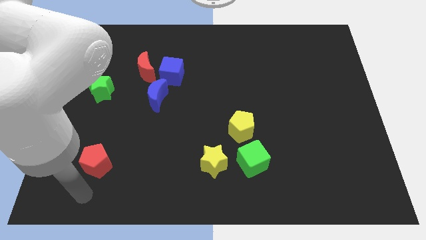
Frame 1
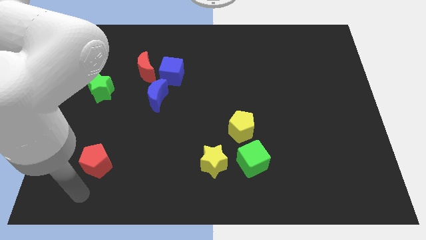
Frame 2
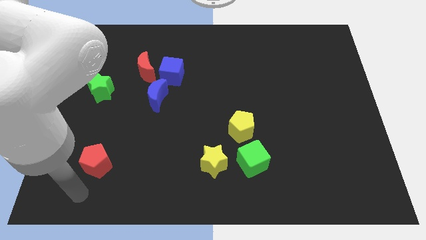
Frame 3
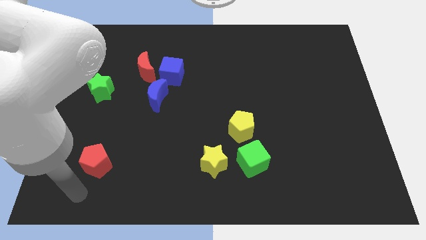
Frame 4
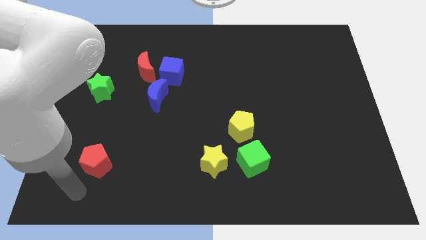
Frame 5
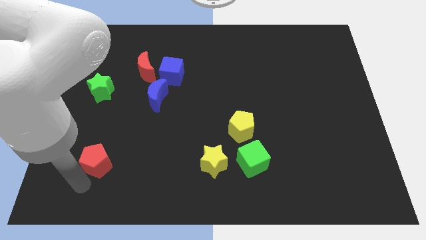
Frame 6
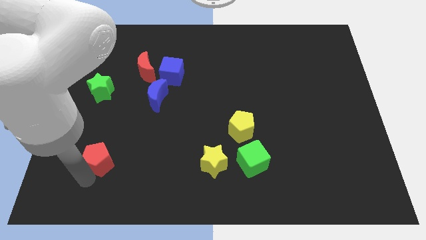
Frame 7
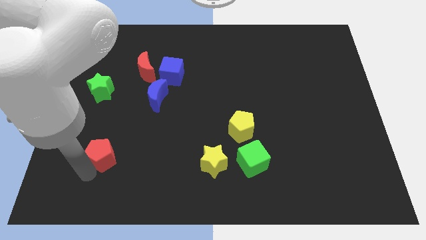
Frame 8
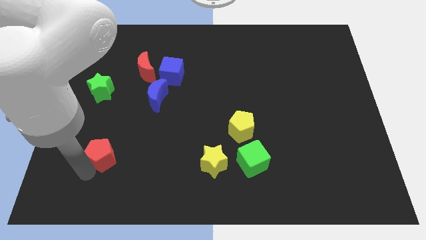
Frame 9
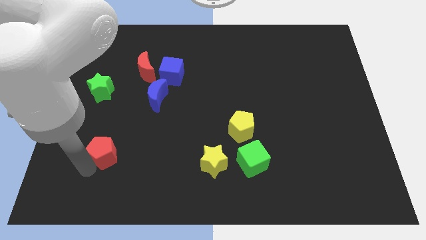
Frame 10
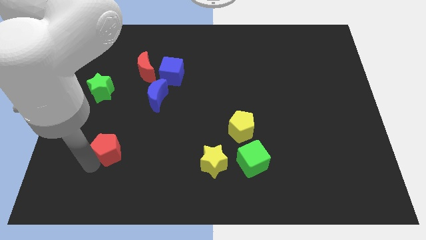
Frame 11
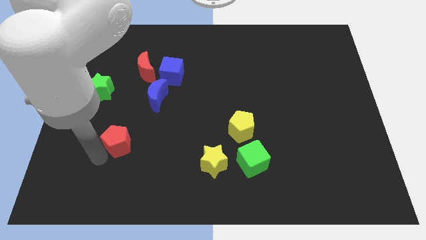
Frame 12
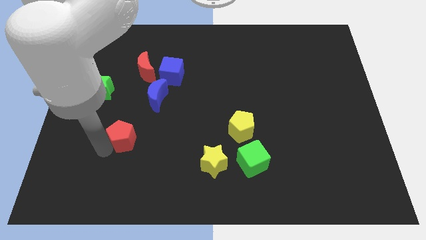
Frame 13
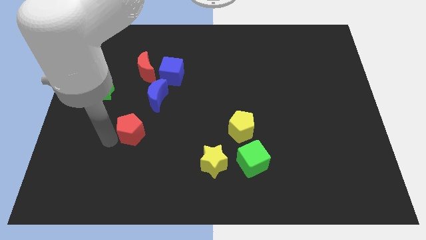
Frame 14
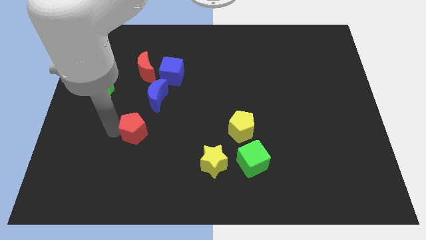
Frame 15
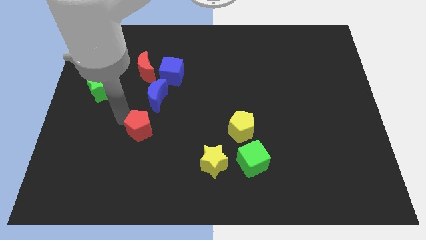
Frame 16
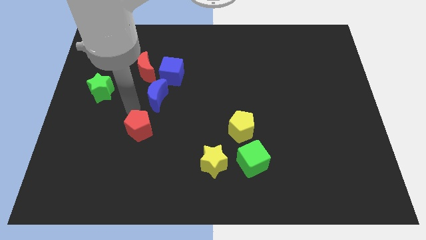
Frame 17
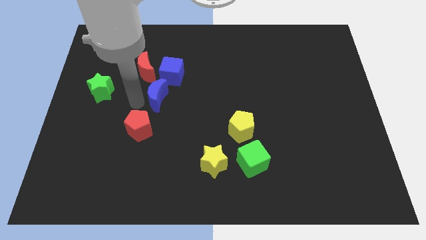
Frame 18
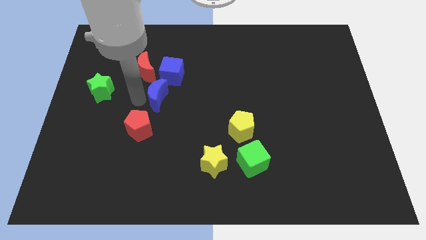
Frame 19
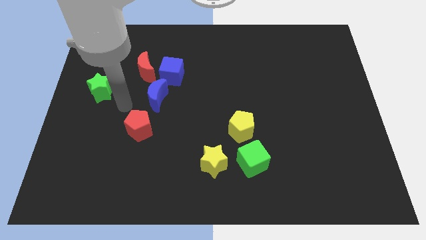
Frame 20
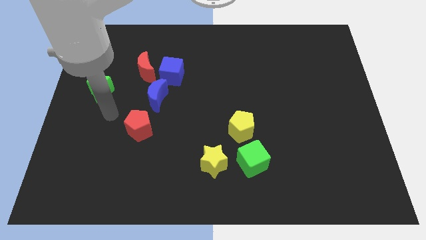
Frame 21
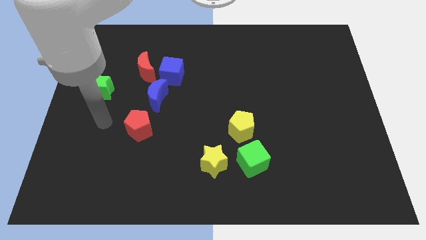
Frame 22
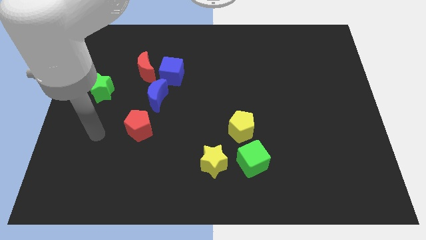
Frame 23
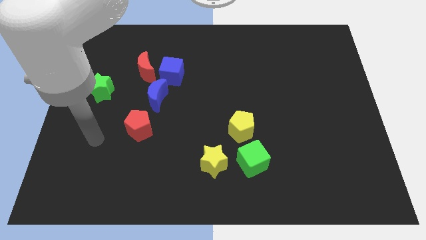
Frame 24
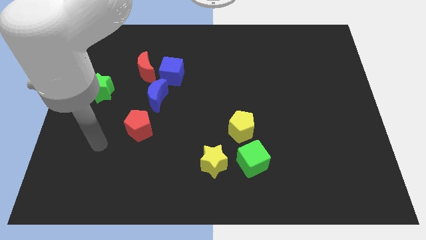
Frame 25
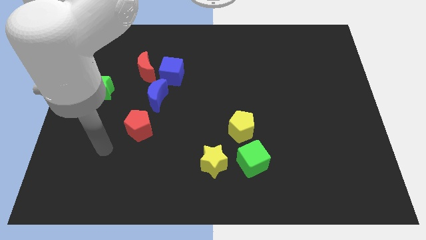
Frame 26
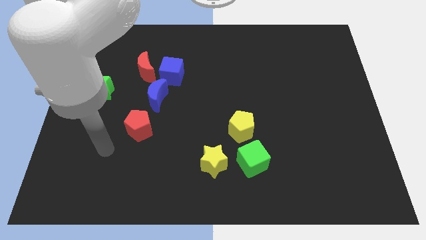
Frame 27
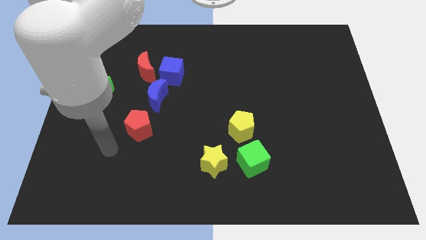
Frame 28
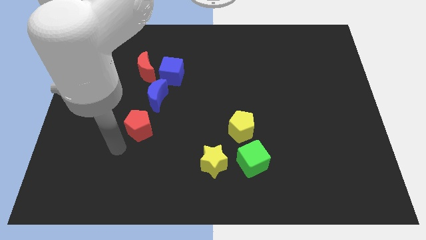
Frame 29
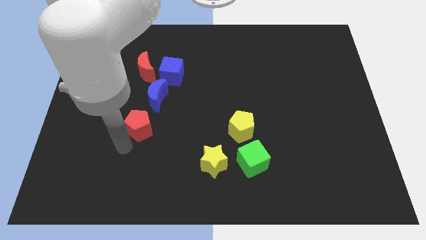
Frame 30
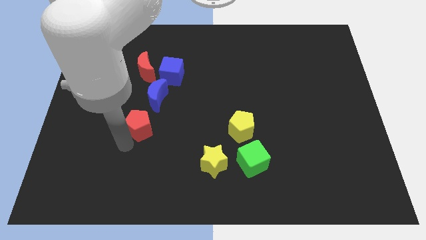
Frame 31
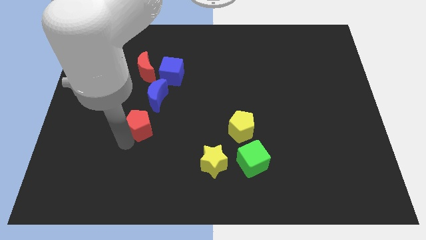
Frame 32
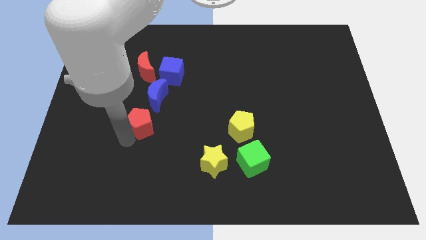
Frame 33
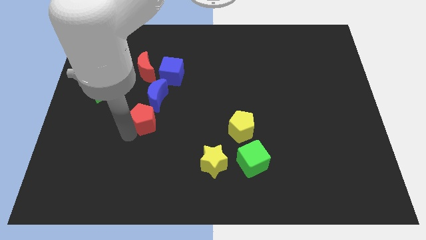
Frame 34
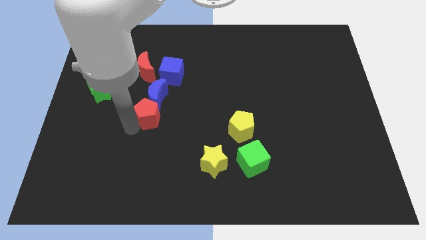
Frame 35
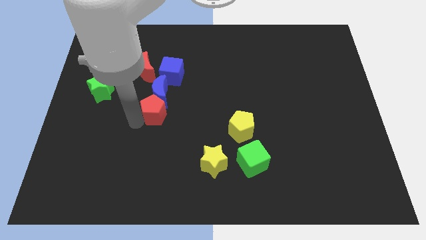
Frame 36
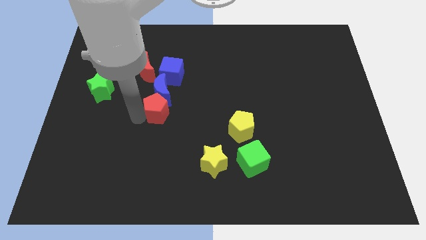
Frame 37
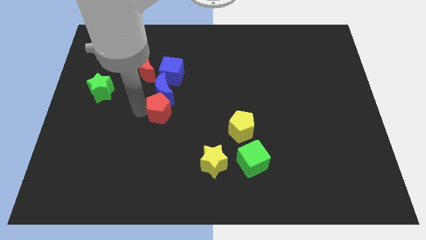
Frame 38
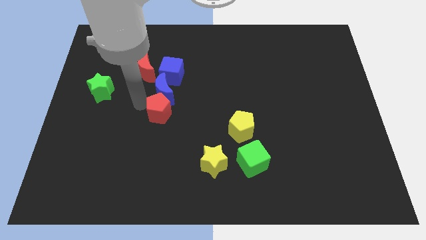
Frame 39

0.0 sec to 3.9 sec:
move red pentagon close to blue moon

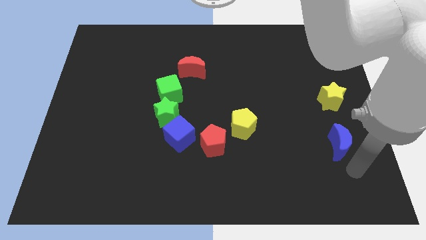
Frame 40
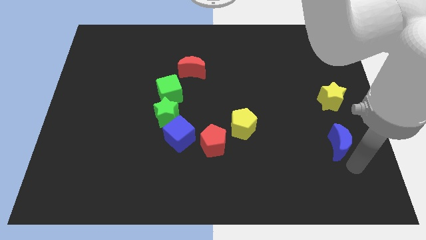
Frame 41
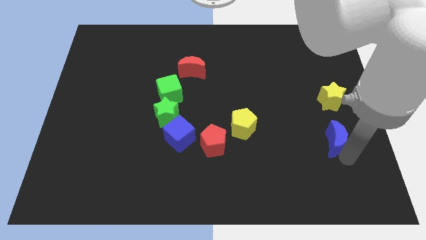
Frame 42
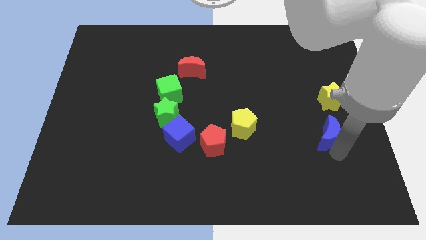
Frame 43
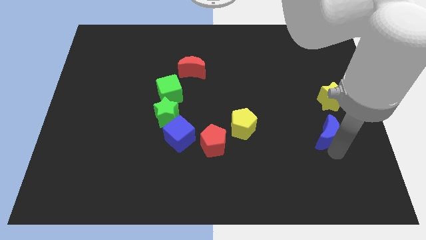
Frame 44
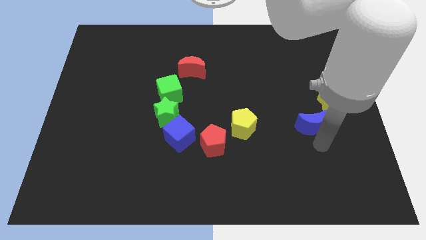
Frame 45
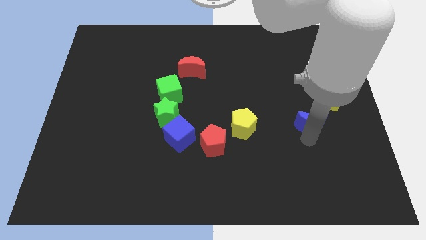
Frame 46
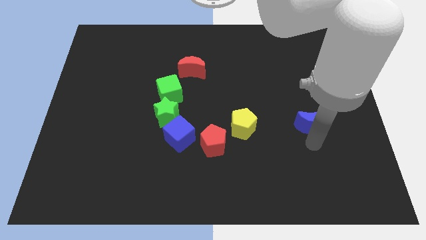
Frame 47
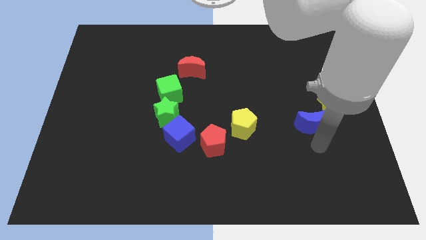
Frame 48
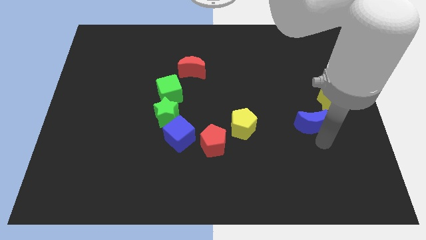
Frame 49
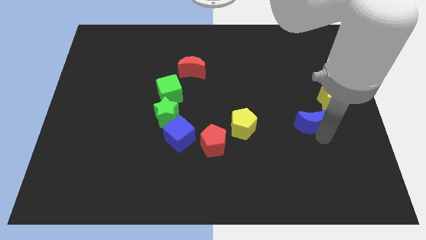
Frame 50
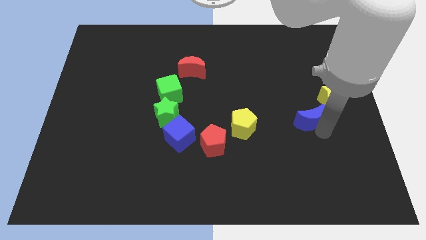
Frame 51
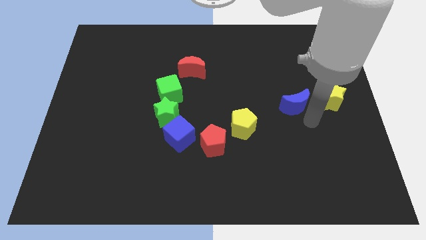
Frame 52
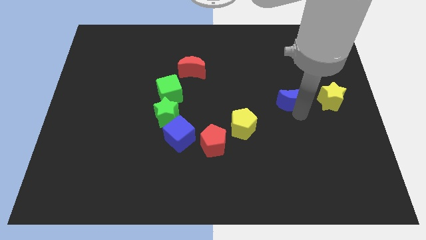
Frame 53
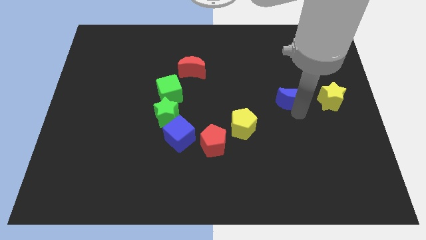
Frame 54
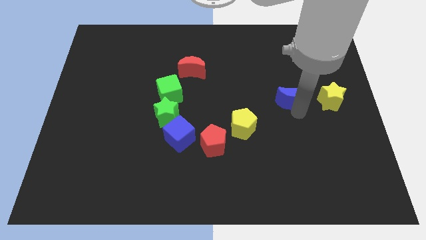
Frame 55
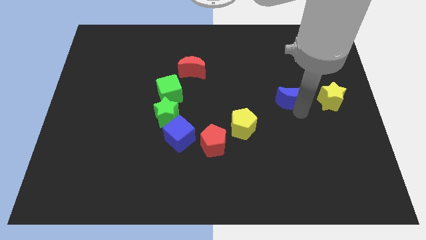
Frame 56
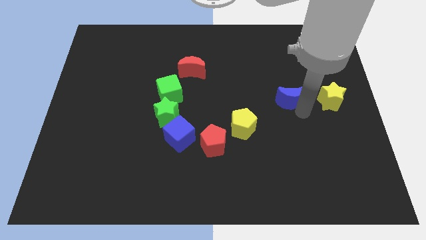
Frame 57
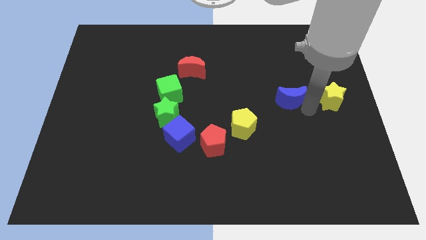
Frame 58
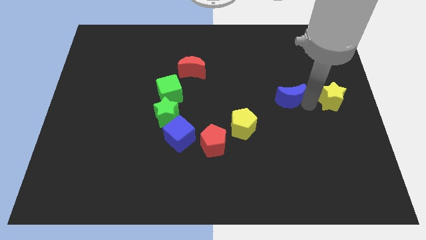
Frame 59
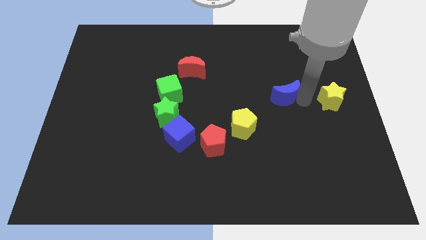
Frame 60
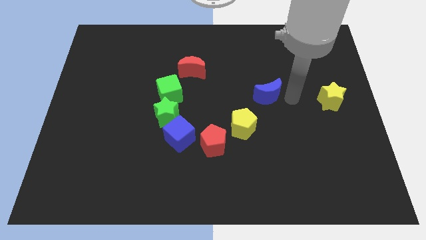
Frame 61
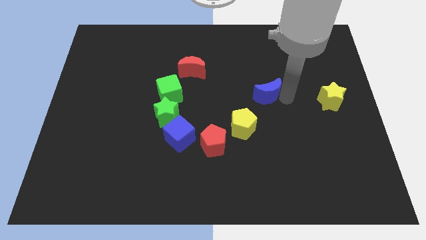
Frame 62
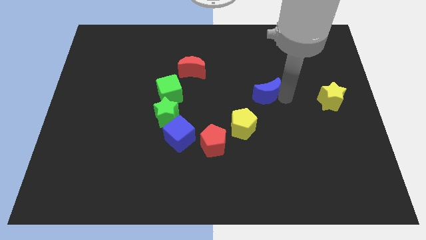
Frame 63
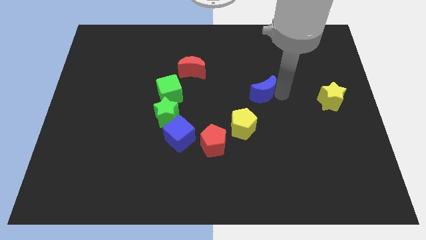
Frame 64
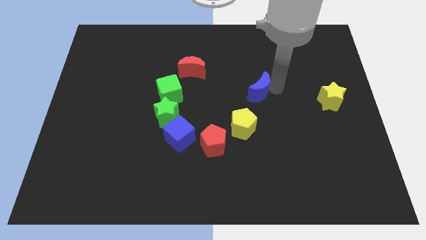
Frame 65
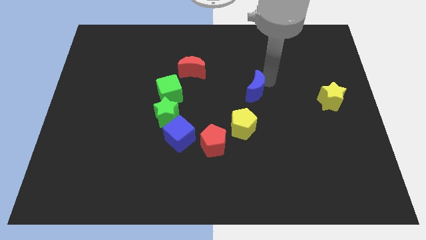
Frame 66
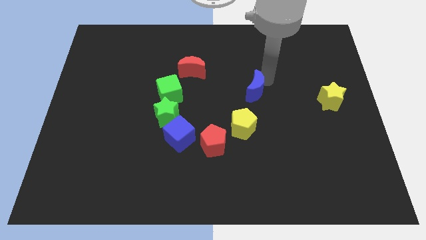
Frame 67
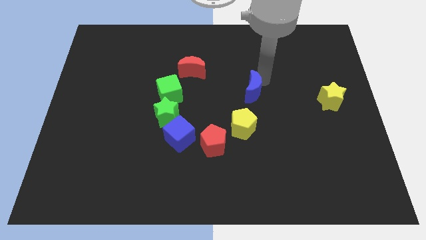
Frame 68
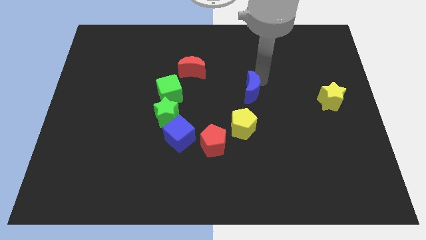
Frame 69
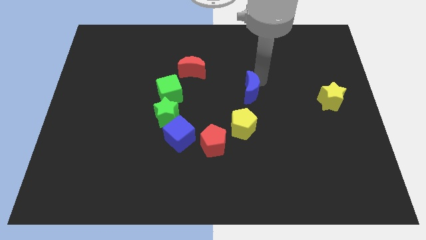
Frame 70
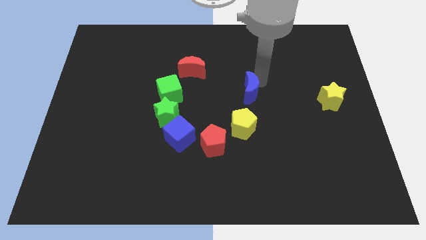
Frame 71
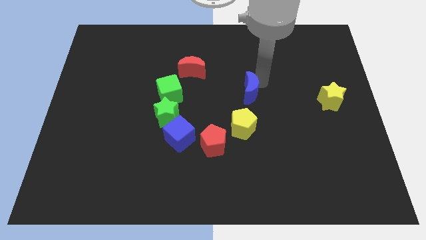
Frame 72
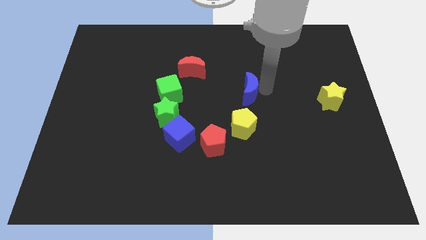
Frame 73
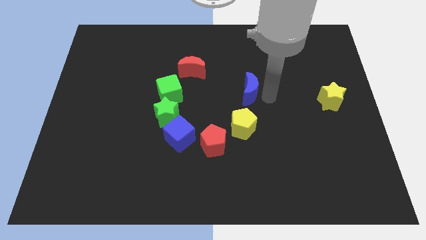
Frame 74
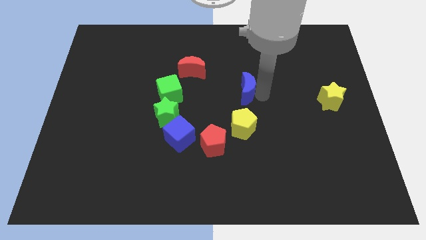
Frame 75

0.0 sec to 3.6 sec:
move blue moon towards center

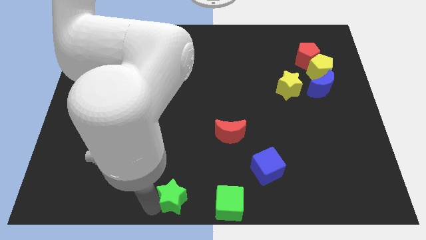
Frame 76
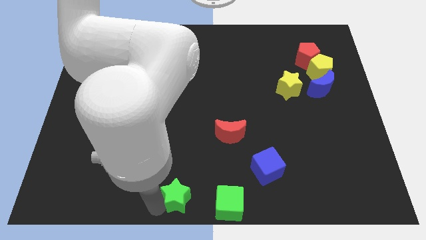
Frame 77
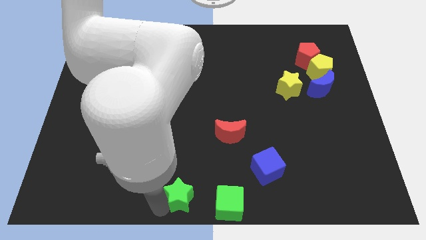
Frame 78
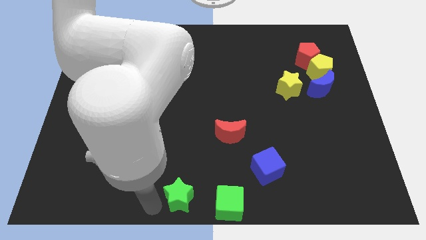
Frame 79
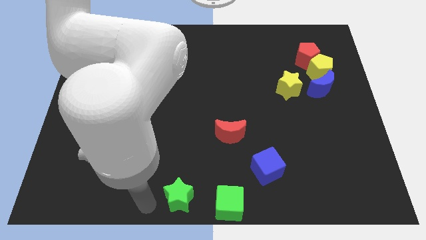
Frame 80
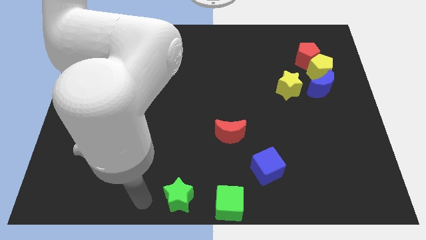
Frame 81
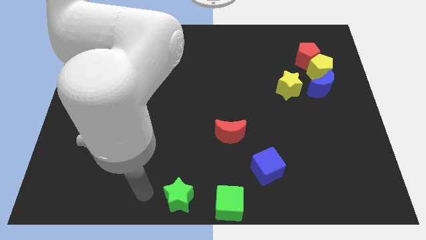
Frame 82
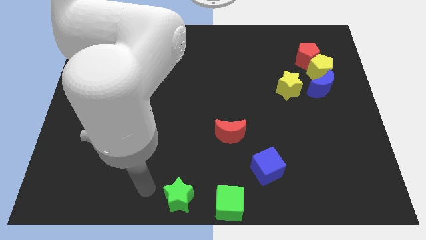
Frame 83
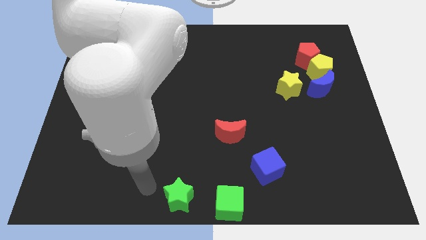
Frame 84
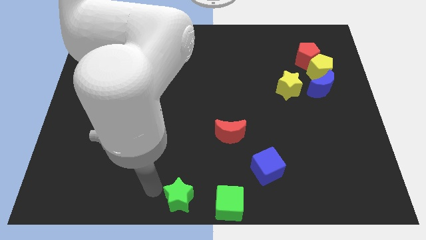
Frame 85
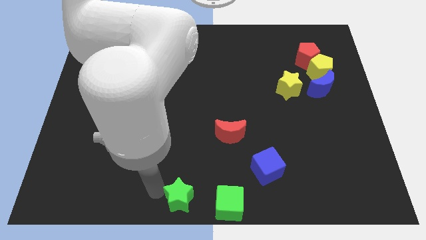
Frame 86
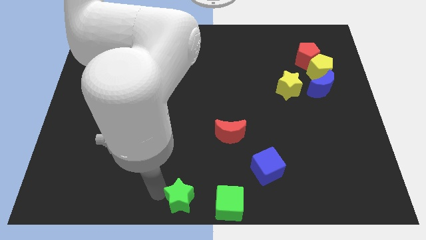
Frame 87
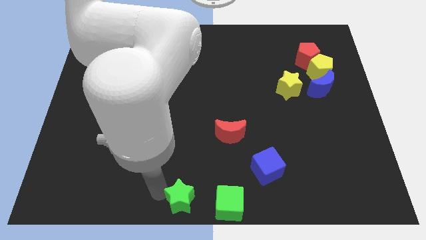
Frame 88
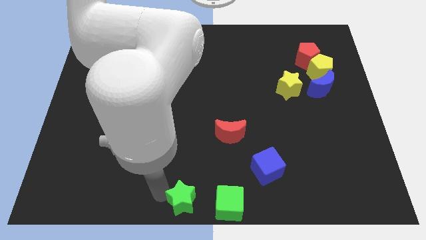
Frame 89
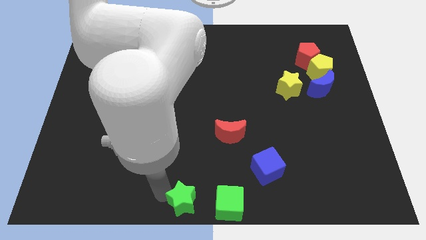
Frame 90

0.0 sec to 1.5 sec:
move the green star left beside the green cube
